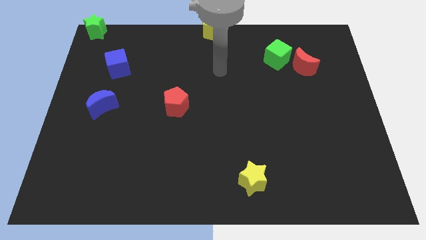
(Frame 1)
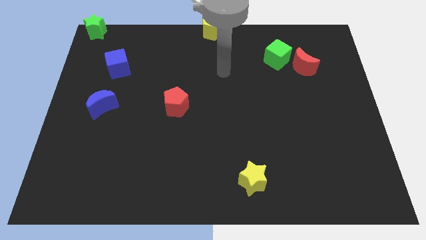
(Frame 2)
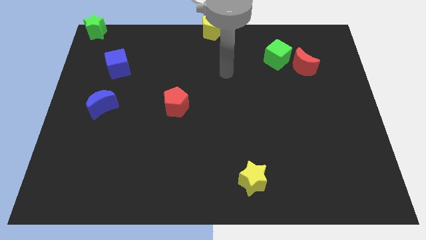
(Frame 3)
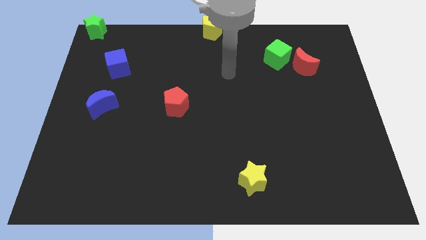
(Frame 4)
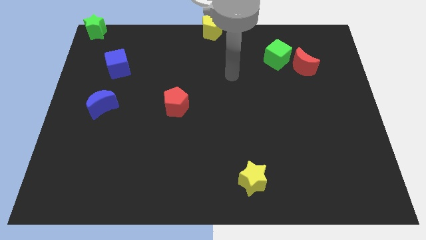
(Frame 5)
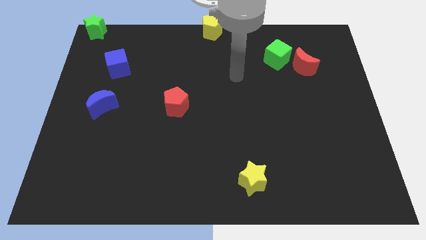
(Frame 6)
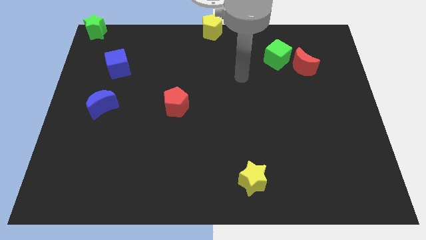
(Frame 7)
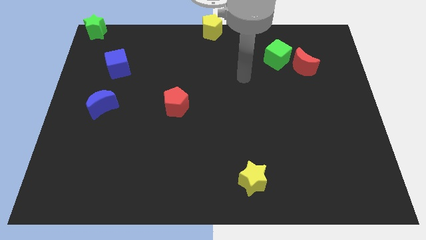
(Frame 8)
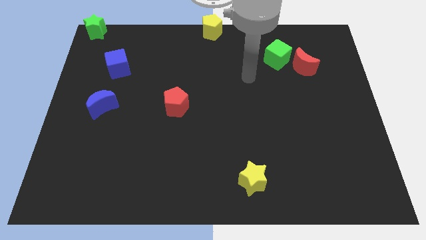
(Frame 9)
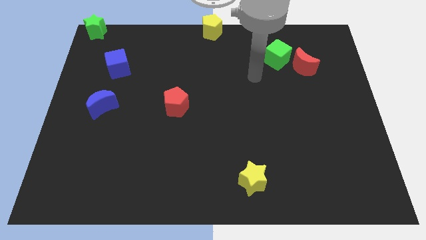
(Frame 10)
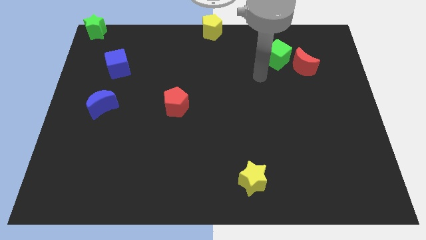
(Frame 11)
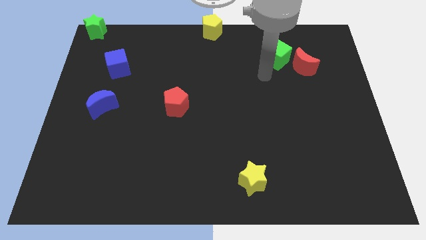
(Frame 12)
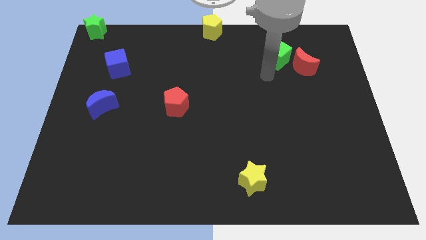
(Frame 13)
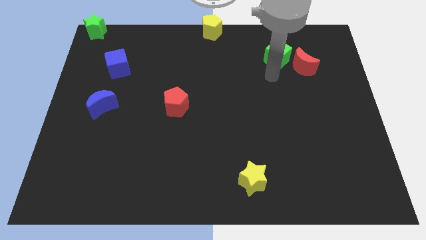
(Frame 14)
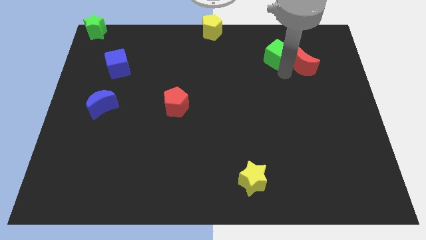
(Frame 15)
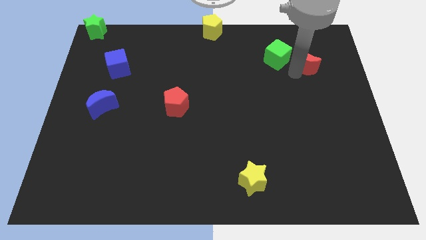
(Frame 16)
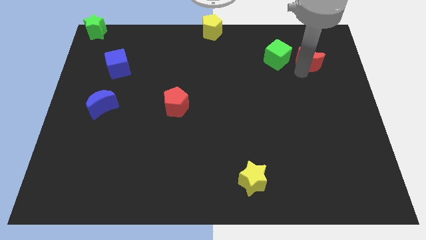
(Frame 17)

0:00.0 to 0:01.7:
touch the bottom of the red moon

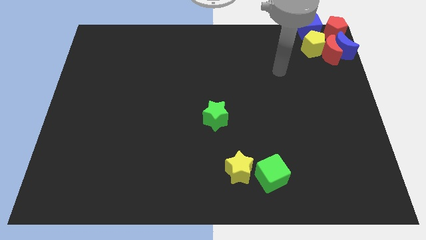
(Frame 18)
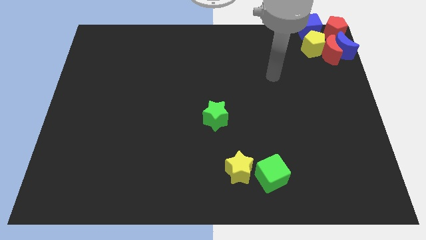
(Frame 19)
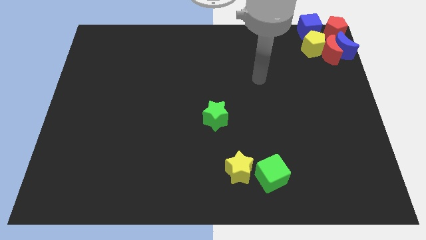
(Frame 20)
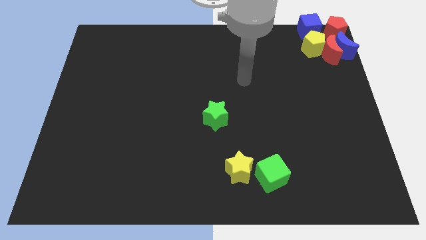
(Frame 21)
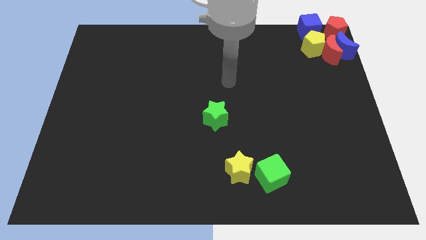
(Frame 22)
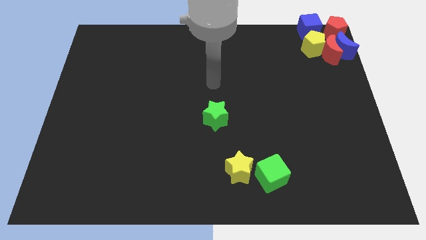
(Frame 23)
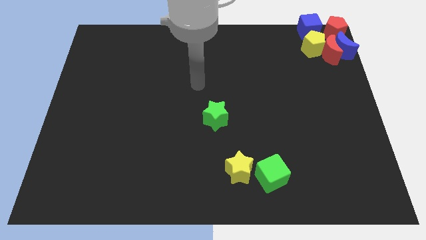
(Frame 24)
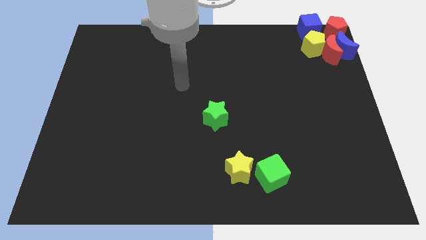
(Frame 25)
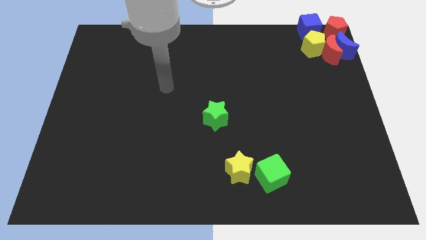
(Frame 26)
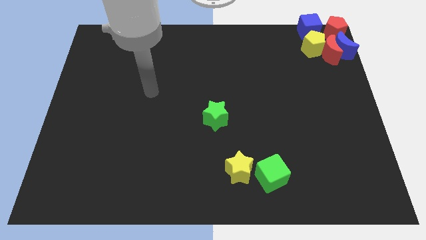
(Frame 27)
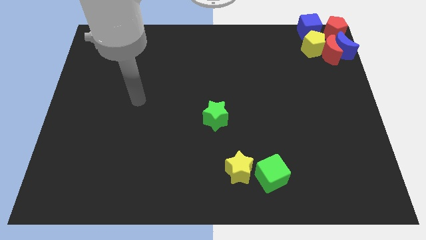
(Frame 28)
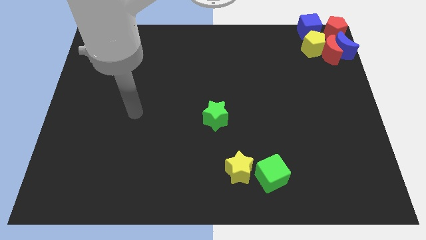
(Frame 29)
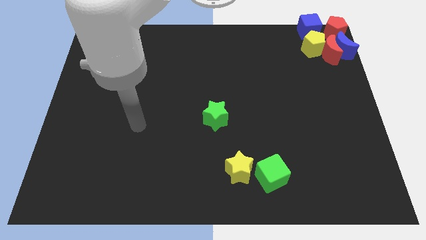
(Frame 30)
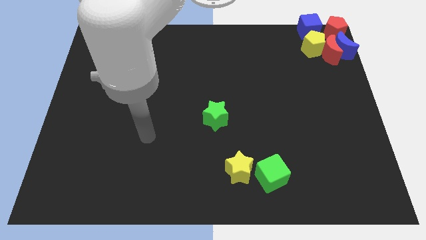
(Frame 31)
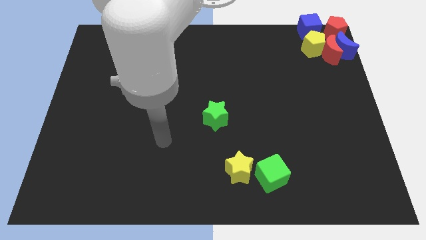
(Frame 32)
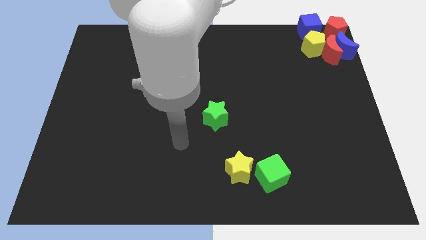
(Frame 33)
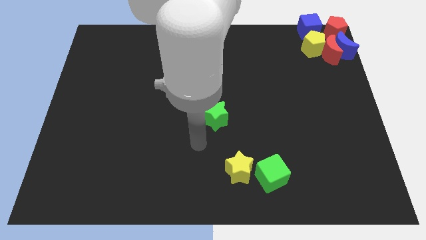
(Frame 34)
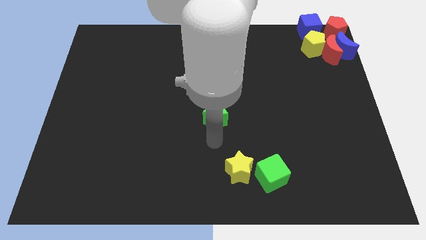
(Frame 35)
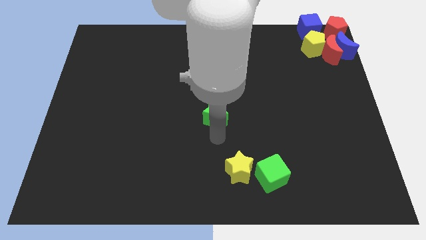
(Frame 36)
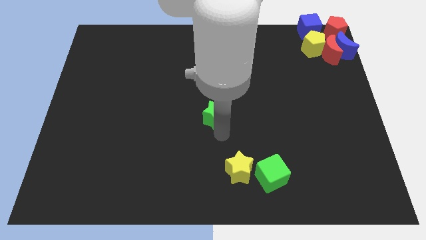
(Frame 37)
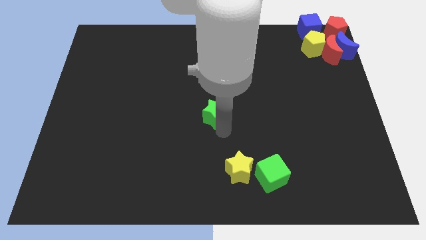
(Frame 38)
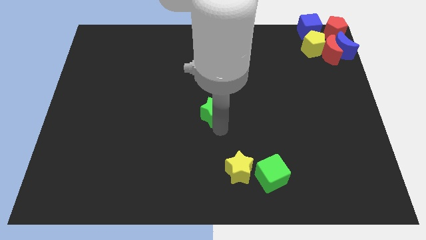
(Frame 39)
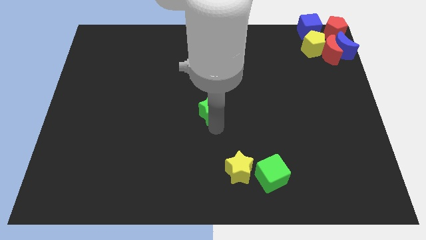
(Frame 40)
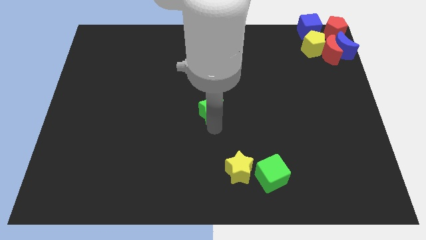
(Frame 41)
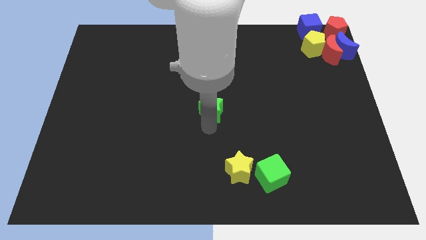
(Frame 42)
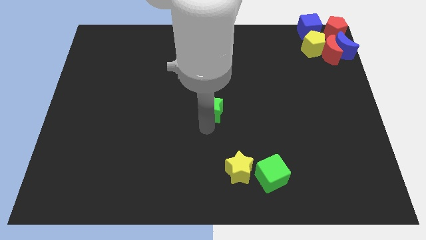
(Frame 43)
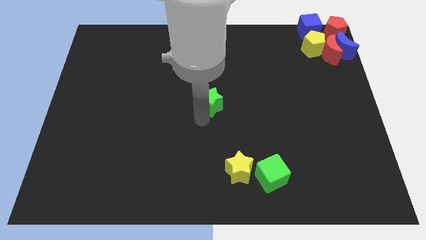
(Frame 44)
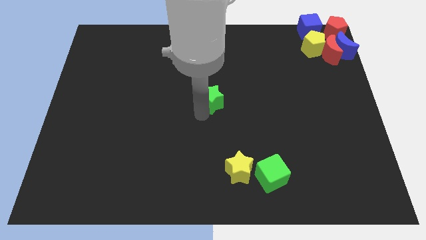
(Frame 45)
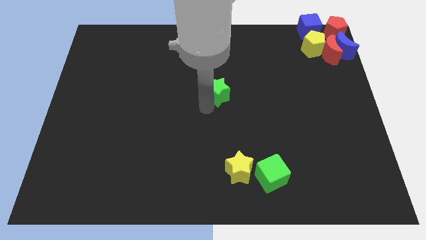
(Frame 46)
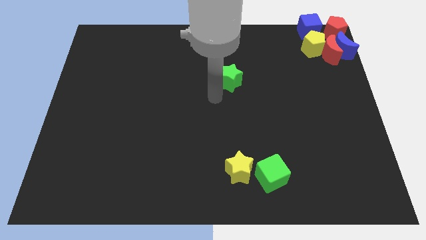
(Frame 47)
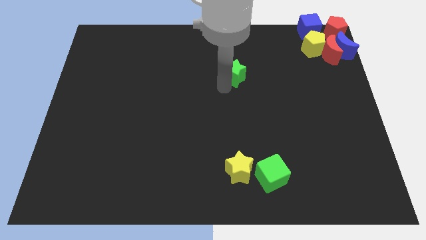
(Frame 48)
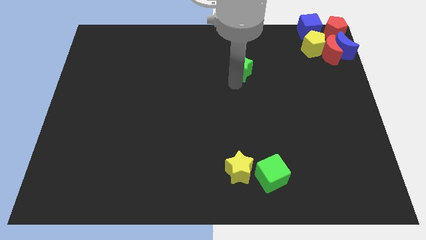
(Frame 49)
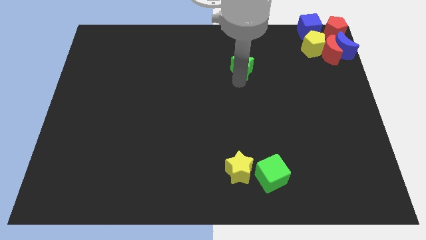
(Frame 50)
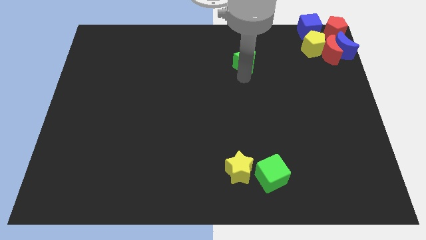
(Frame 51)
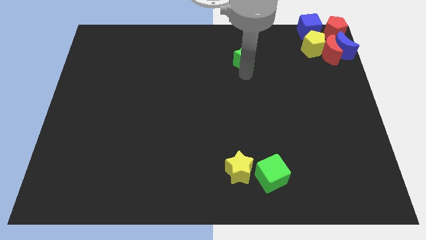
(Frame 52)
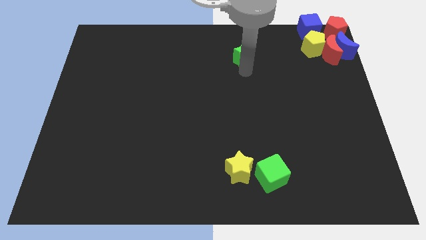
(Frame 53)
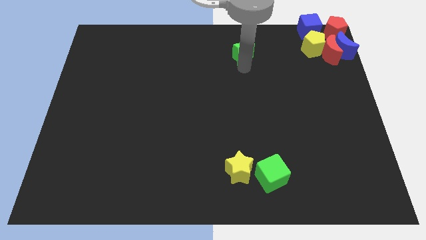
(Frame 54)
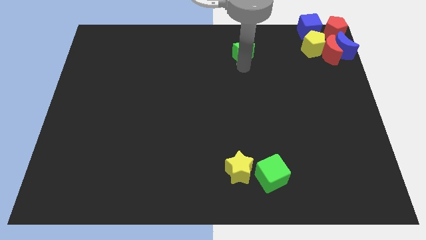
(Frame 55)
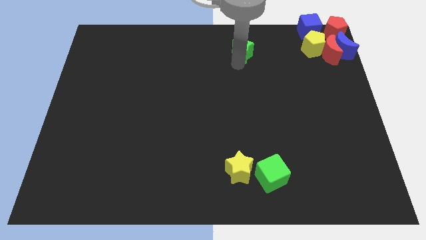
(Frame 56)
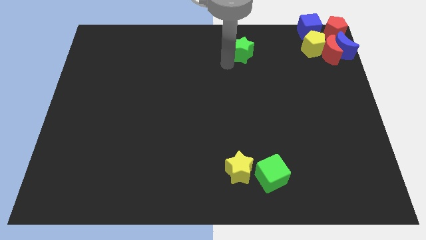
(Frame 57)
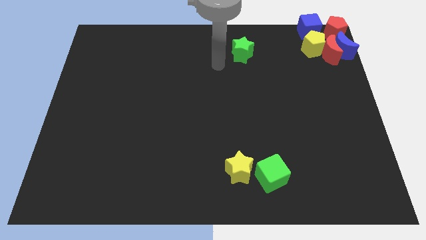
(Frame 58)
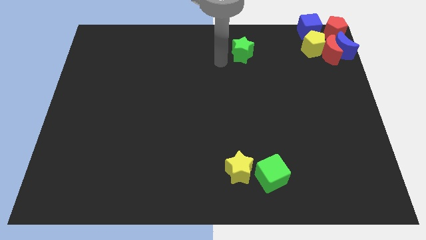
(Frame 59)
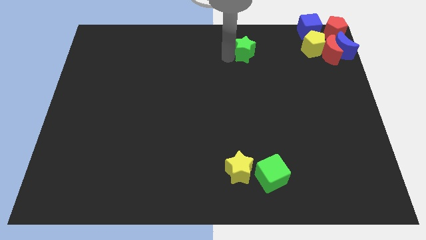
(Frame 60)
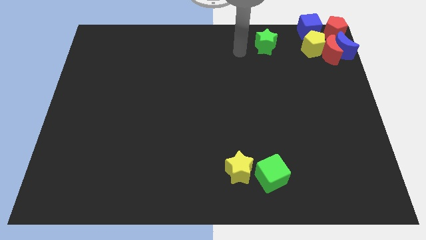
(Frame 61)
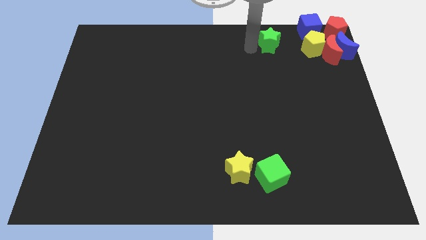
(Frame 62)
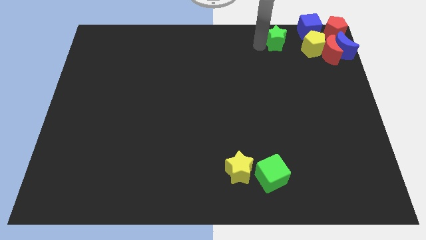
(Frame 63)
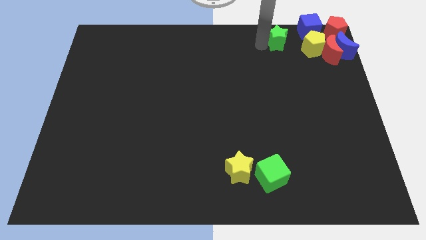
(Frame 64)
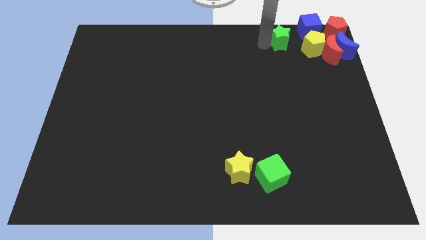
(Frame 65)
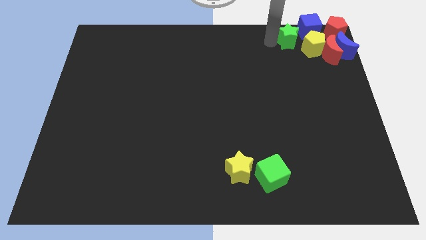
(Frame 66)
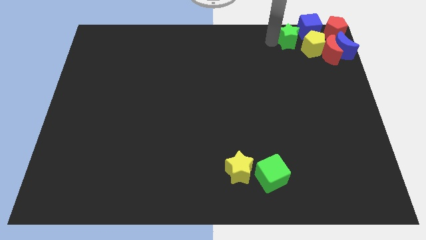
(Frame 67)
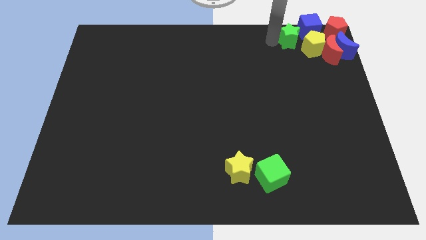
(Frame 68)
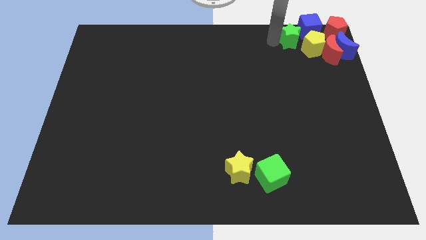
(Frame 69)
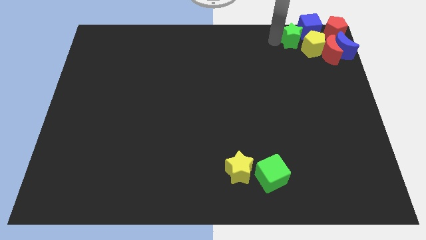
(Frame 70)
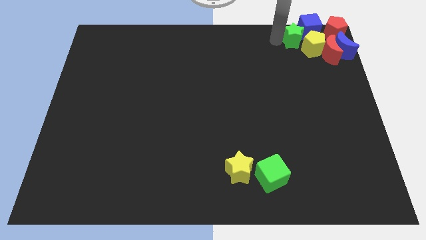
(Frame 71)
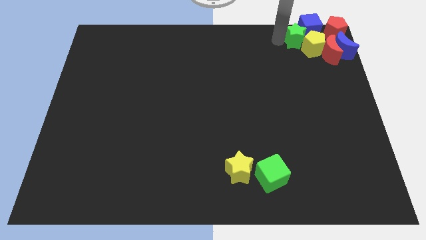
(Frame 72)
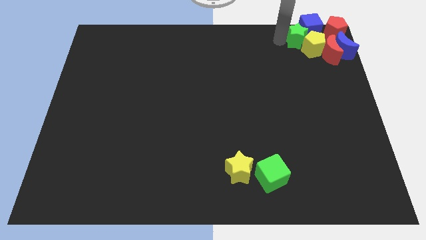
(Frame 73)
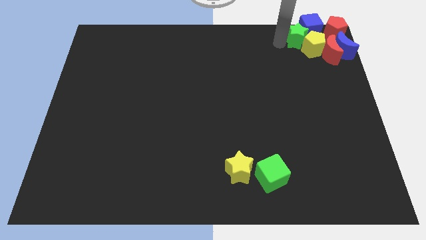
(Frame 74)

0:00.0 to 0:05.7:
push the green star into the group of blocks

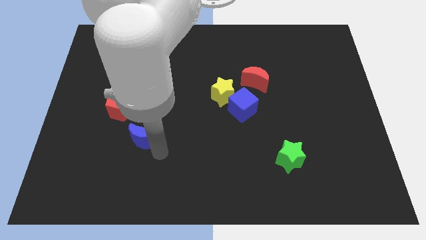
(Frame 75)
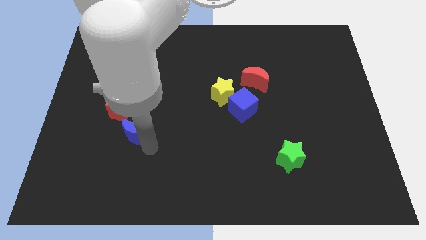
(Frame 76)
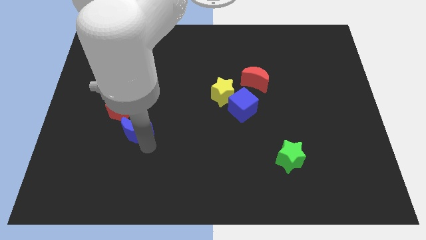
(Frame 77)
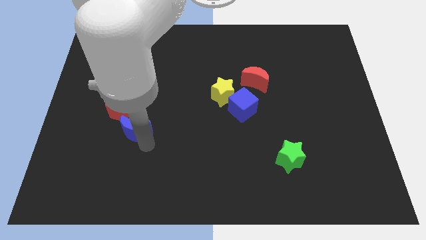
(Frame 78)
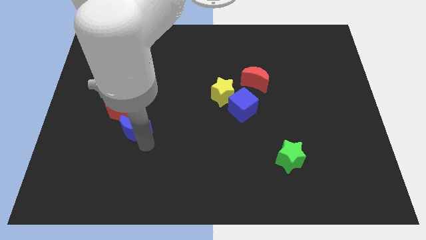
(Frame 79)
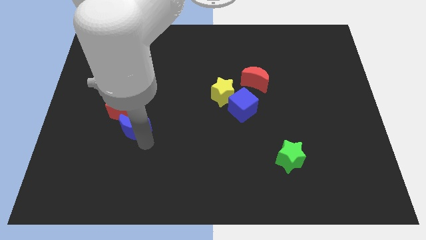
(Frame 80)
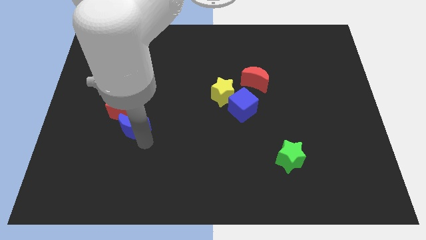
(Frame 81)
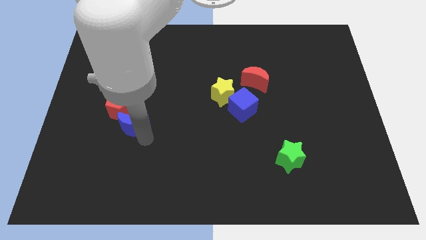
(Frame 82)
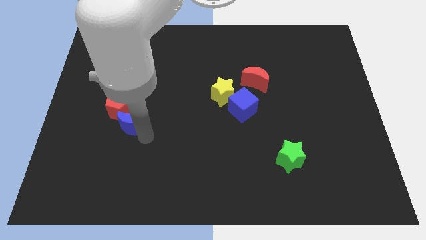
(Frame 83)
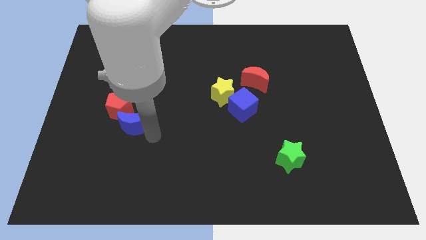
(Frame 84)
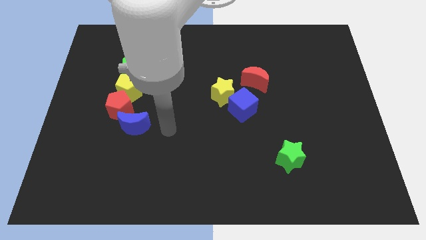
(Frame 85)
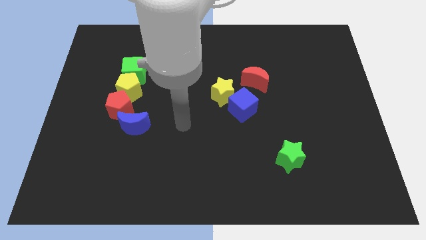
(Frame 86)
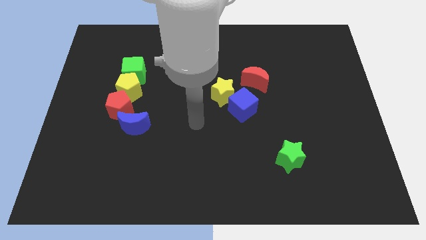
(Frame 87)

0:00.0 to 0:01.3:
place the blue crescent below the red pentagon

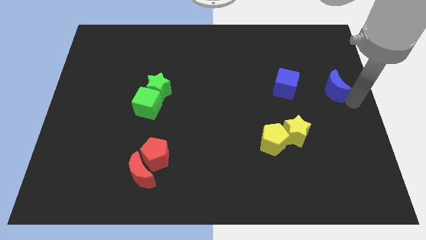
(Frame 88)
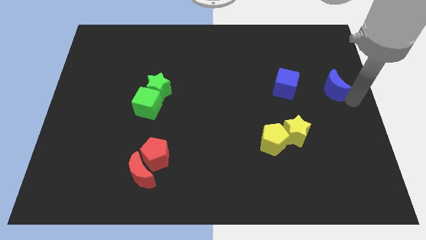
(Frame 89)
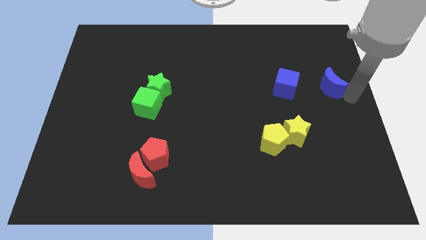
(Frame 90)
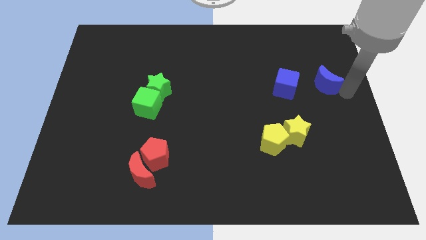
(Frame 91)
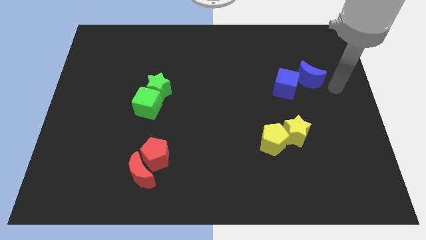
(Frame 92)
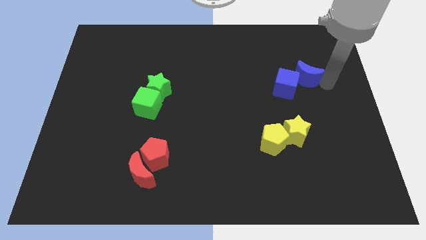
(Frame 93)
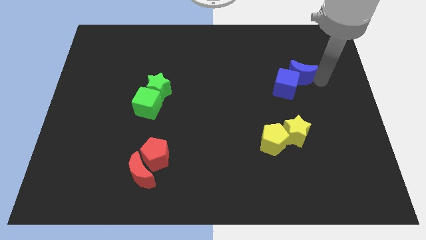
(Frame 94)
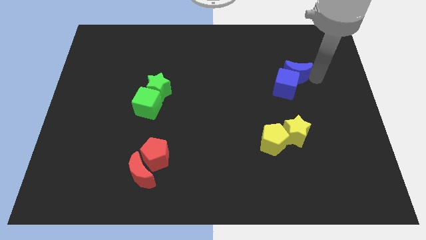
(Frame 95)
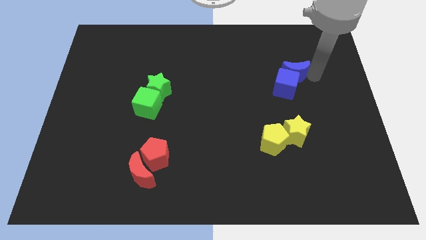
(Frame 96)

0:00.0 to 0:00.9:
place the blue moon above the blue cube
